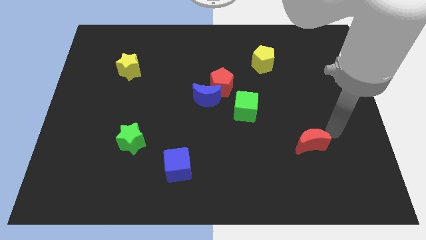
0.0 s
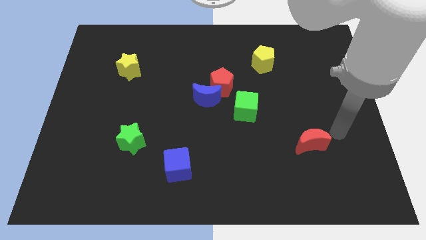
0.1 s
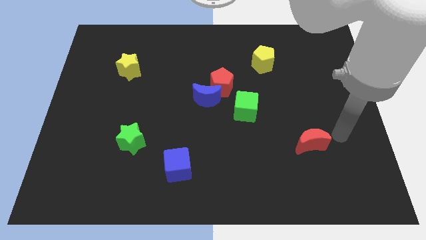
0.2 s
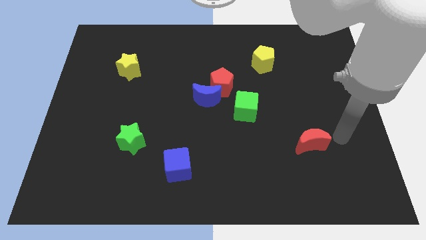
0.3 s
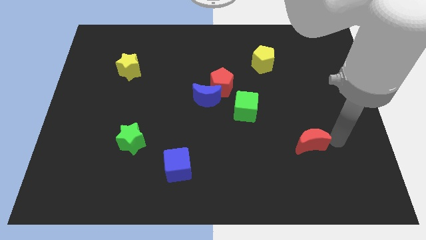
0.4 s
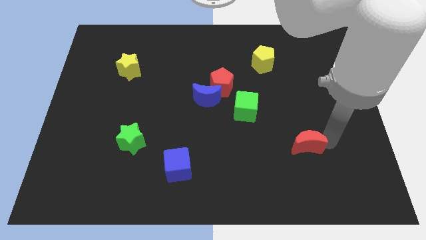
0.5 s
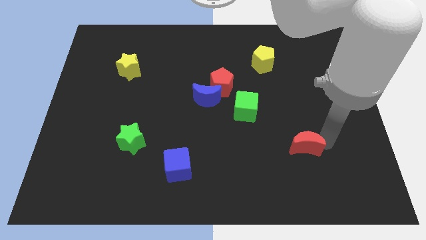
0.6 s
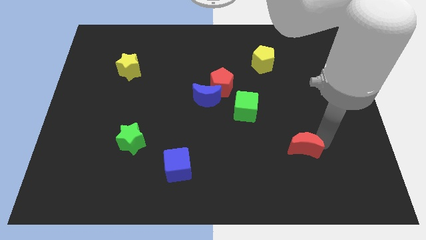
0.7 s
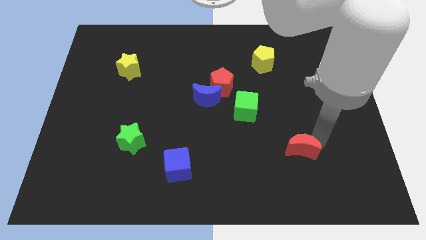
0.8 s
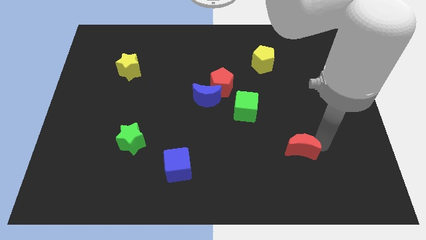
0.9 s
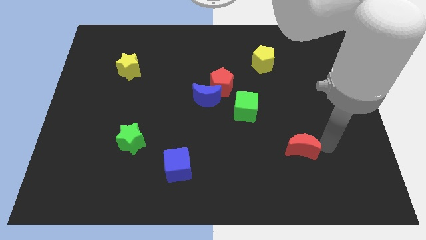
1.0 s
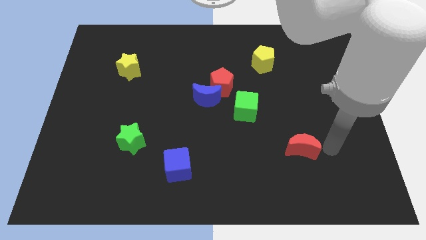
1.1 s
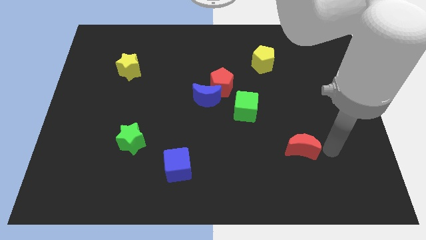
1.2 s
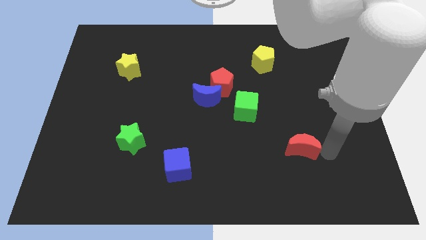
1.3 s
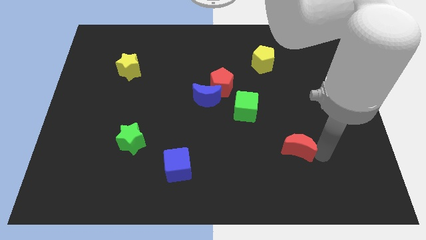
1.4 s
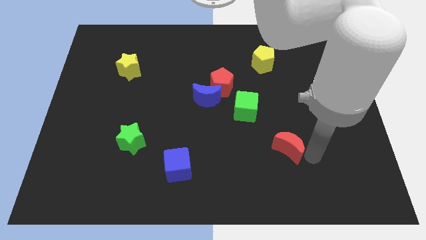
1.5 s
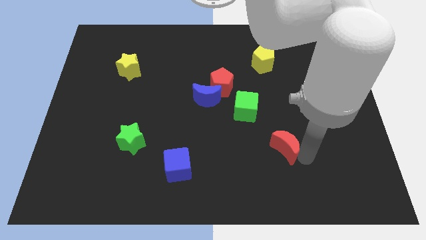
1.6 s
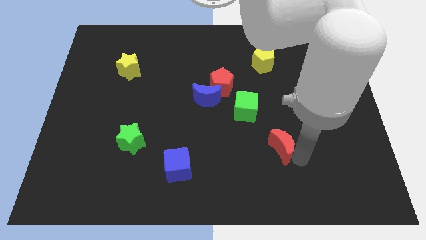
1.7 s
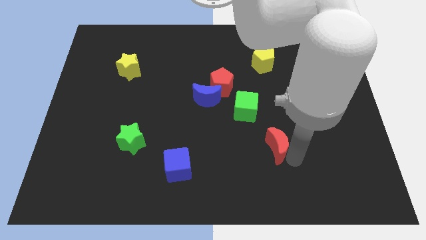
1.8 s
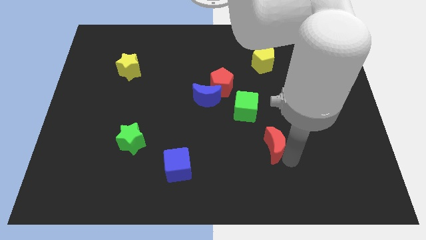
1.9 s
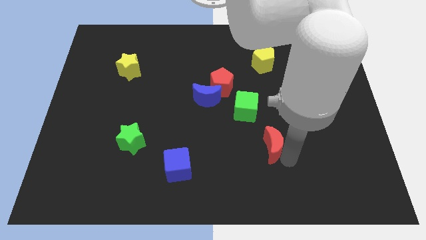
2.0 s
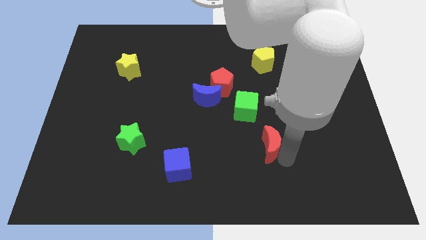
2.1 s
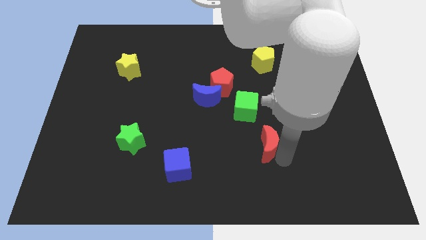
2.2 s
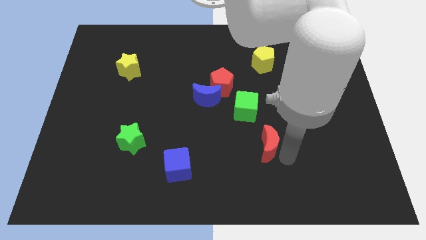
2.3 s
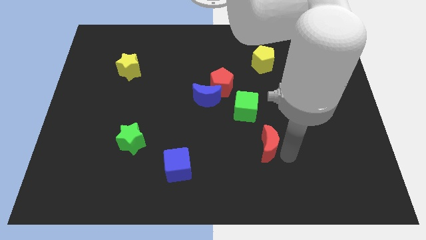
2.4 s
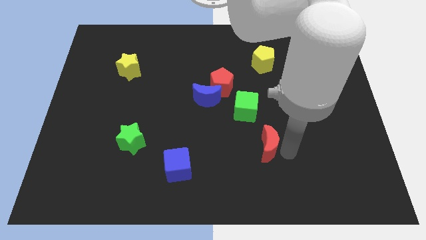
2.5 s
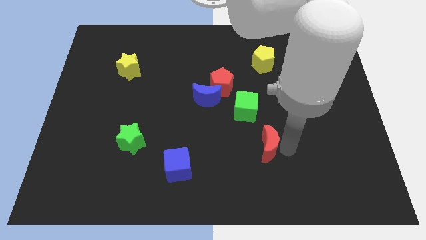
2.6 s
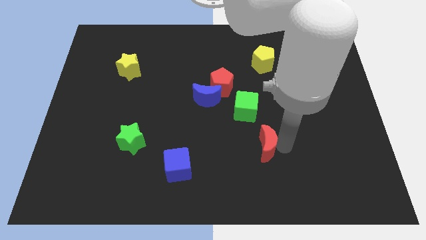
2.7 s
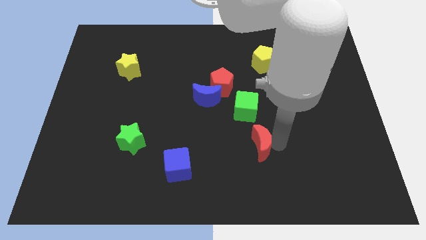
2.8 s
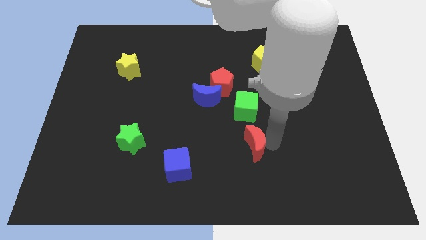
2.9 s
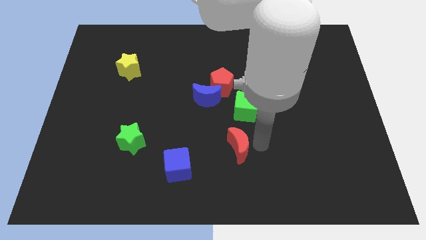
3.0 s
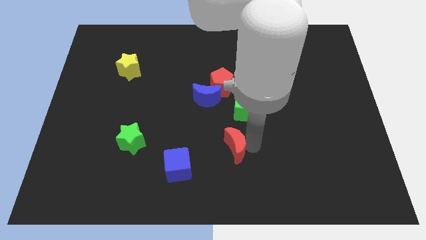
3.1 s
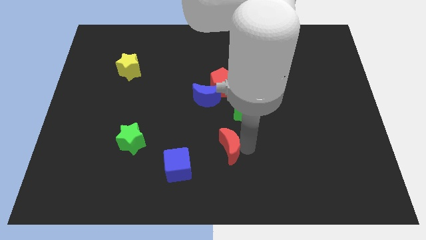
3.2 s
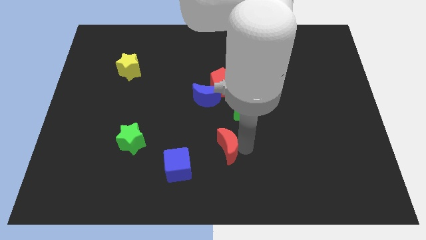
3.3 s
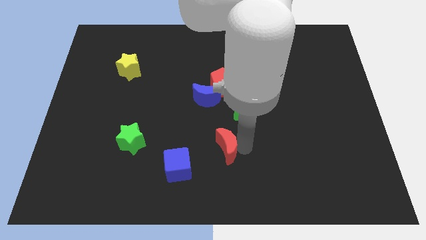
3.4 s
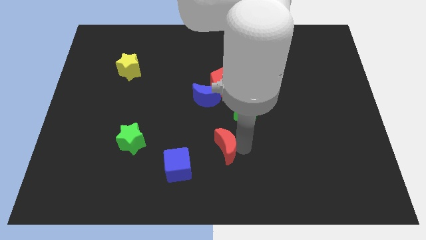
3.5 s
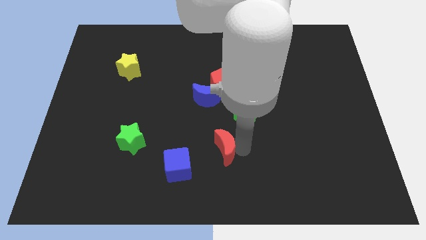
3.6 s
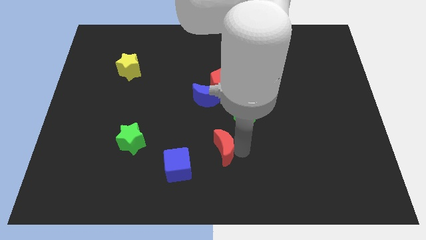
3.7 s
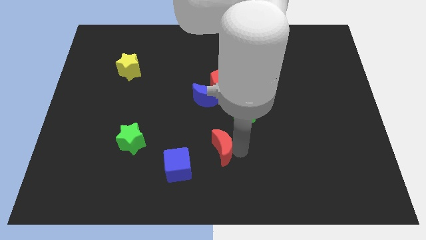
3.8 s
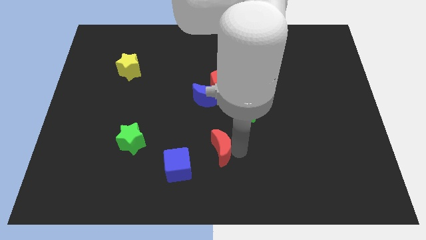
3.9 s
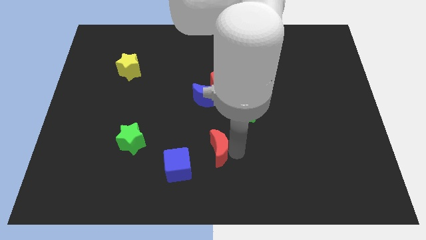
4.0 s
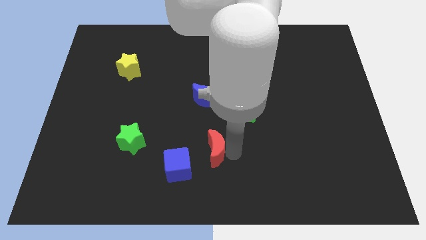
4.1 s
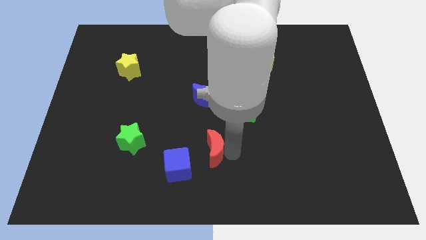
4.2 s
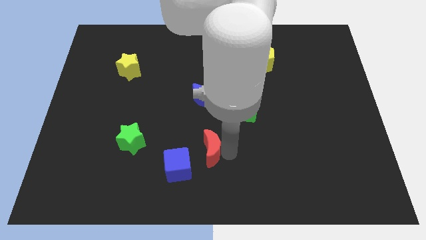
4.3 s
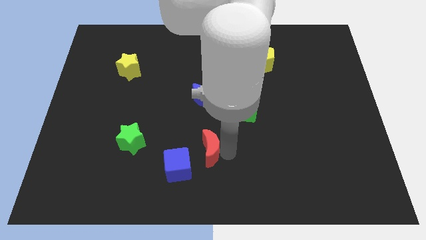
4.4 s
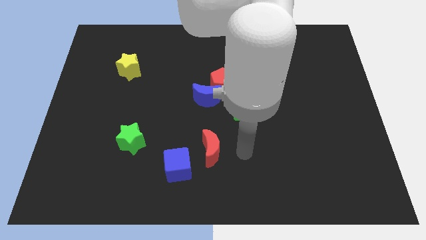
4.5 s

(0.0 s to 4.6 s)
push red crescent towards blue cube

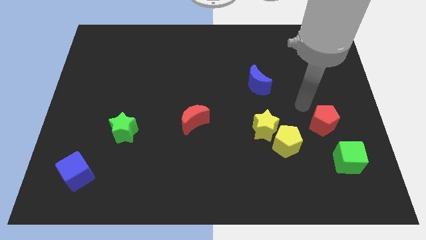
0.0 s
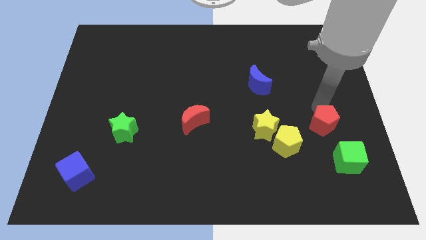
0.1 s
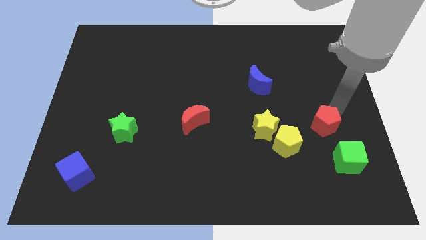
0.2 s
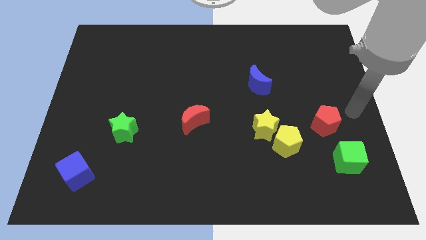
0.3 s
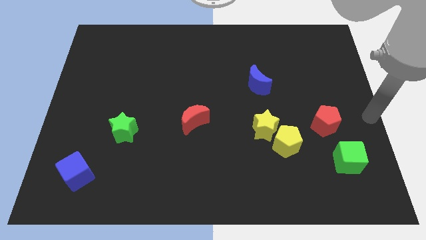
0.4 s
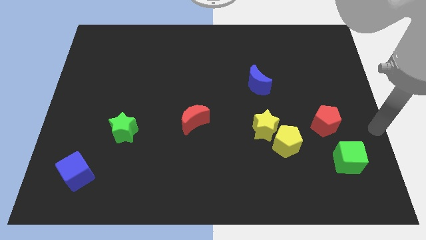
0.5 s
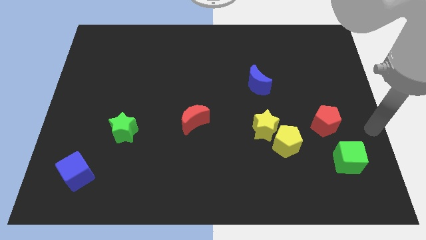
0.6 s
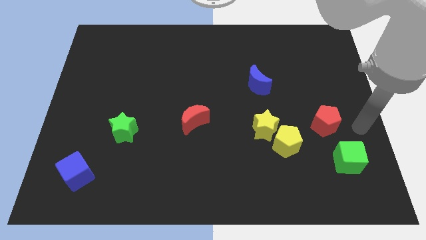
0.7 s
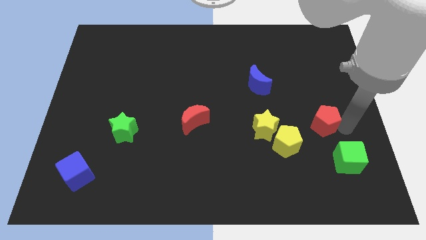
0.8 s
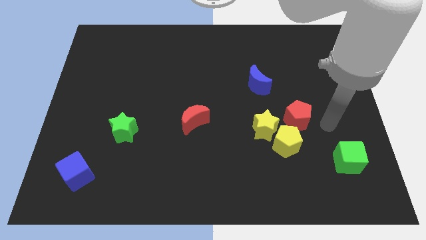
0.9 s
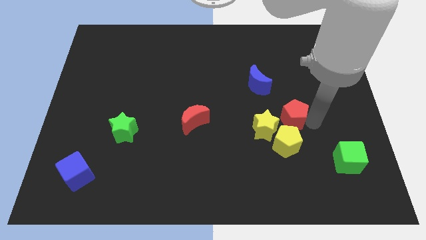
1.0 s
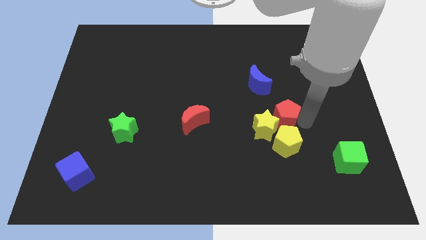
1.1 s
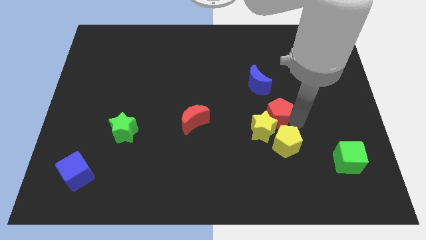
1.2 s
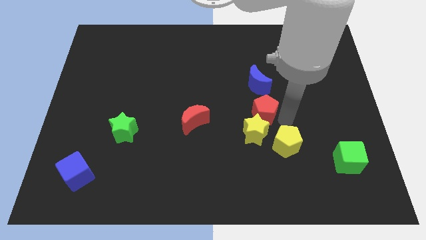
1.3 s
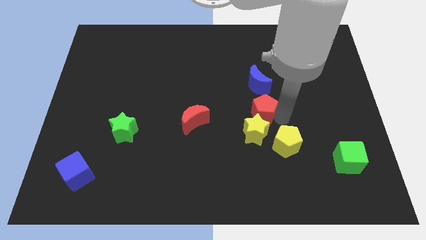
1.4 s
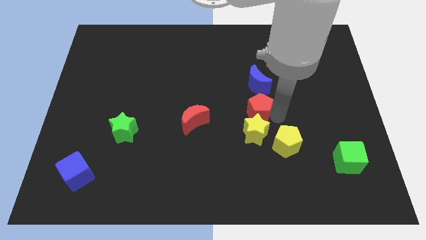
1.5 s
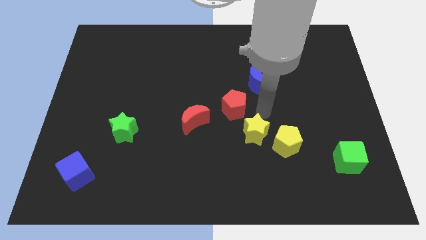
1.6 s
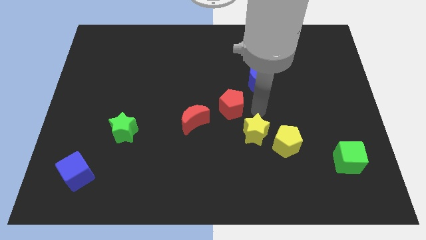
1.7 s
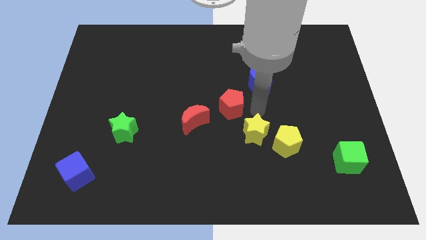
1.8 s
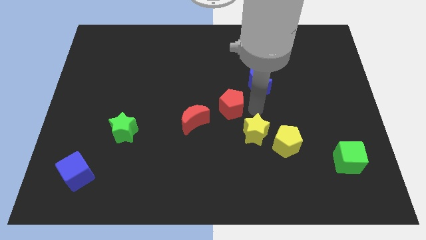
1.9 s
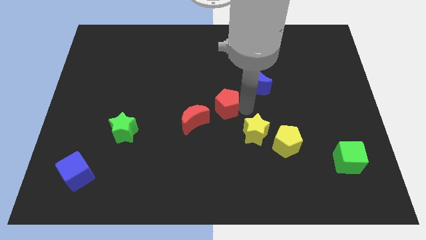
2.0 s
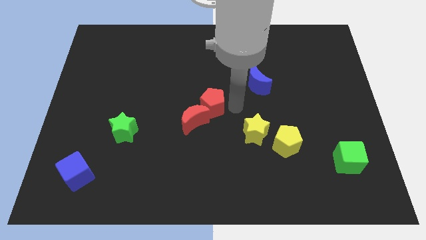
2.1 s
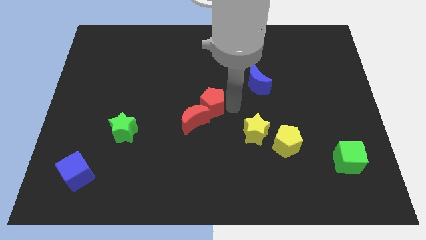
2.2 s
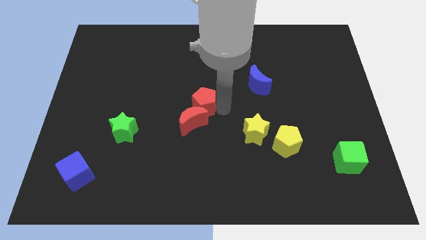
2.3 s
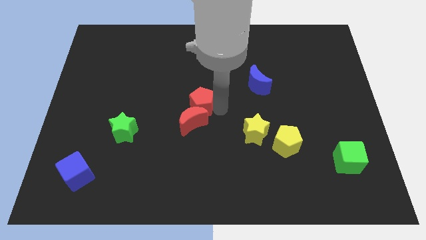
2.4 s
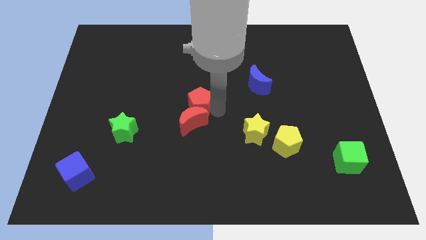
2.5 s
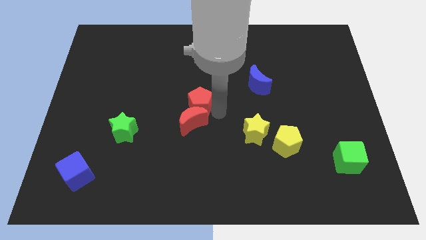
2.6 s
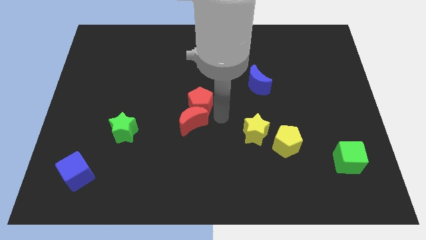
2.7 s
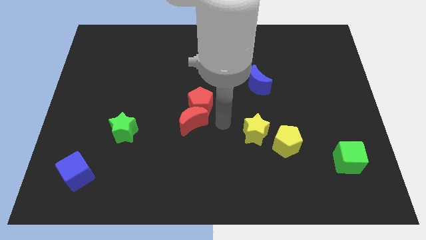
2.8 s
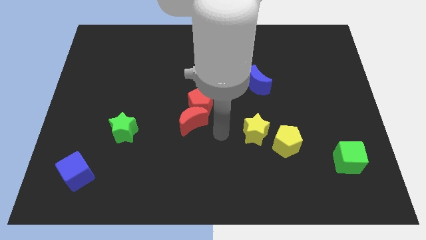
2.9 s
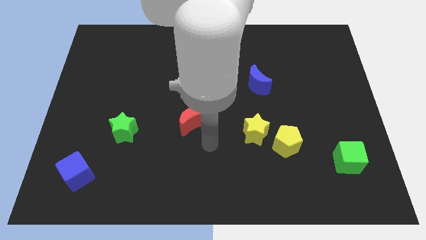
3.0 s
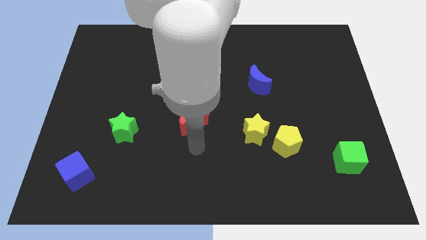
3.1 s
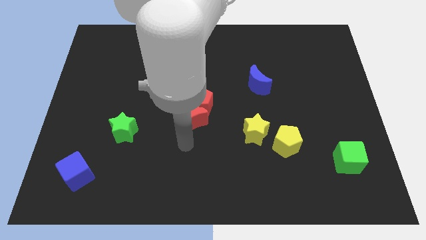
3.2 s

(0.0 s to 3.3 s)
move red pentagon right above the red moon

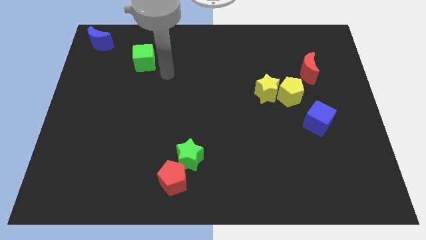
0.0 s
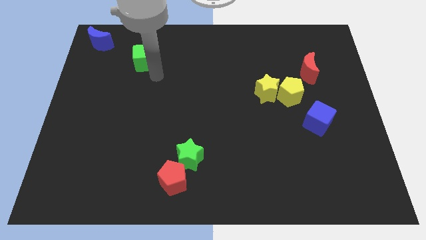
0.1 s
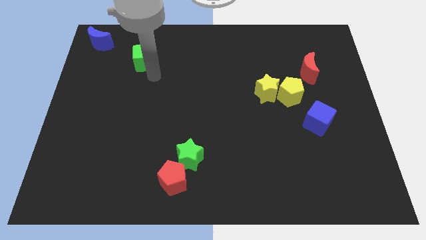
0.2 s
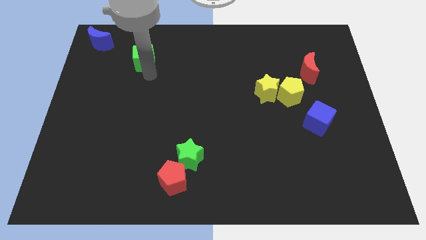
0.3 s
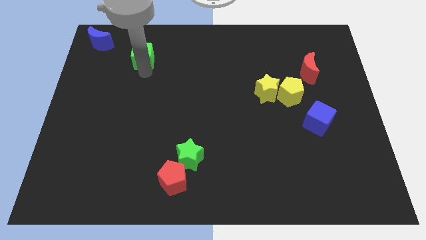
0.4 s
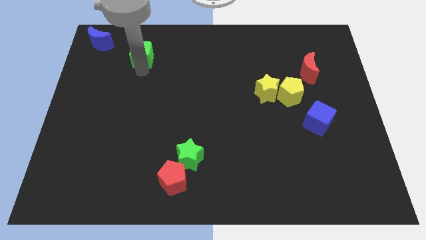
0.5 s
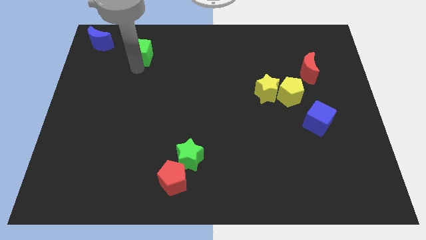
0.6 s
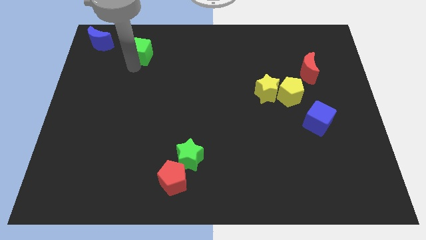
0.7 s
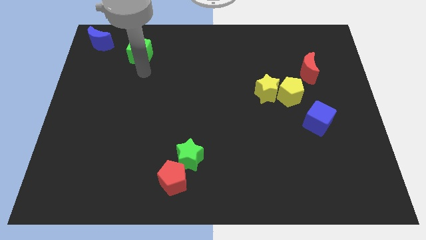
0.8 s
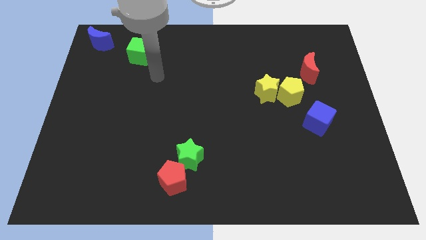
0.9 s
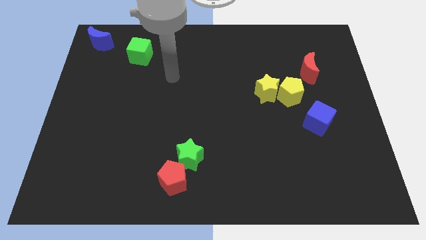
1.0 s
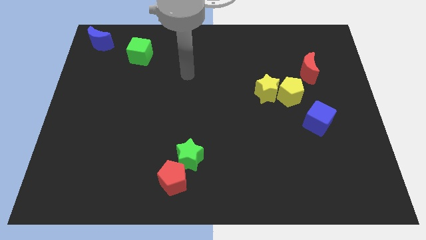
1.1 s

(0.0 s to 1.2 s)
place green cube adjacent to blue crescent
